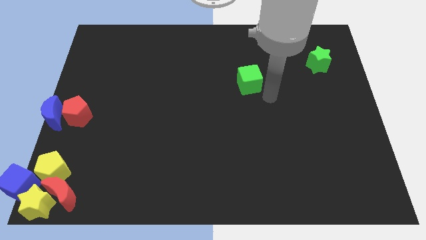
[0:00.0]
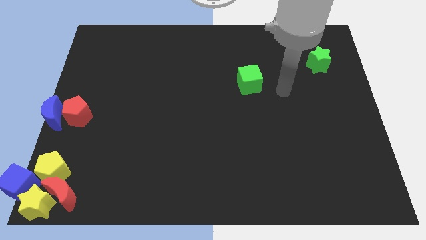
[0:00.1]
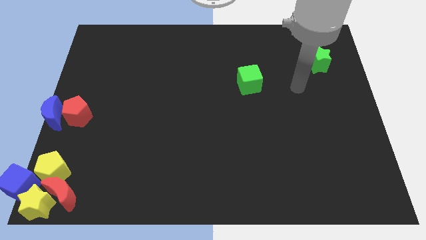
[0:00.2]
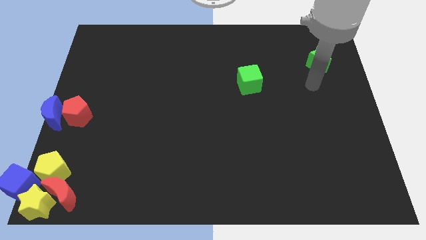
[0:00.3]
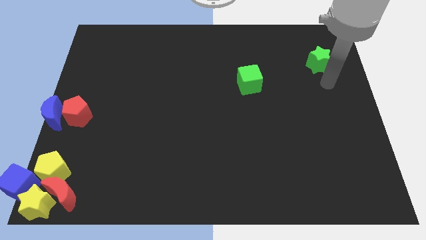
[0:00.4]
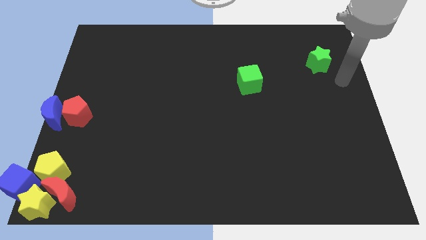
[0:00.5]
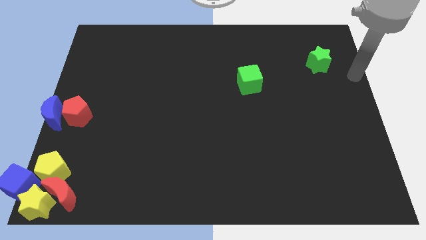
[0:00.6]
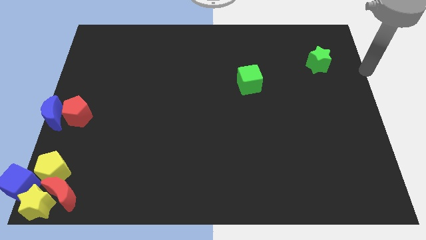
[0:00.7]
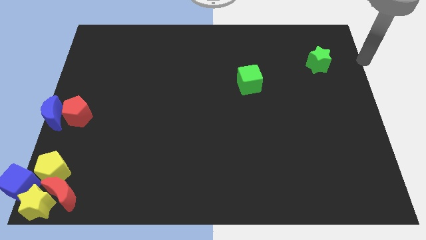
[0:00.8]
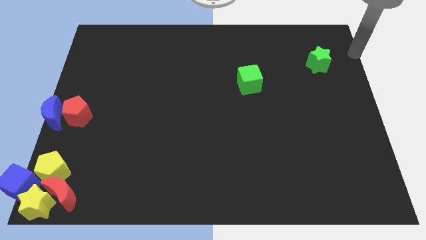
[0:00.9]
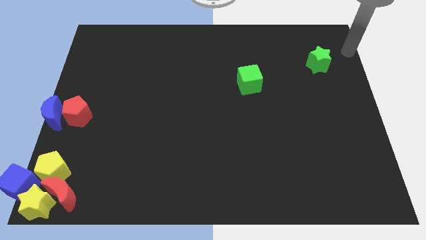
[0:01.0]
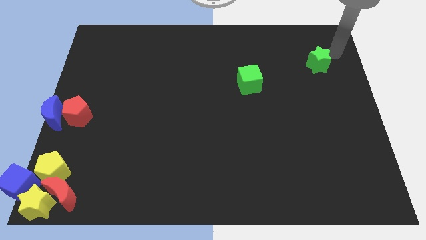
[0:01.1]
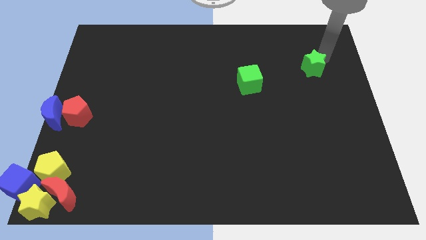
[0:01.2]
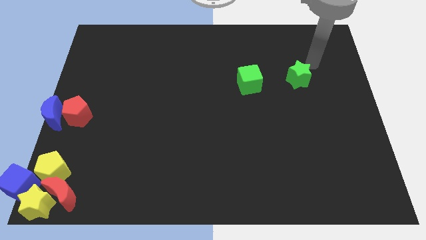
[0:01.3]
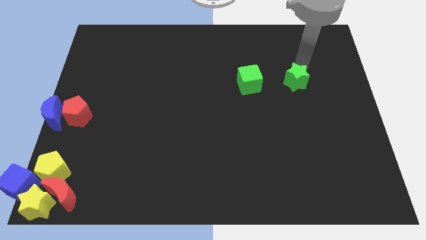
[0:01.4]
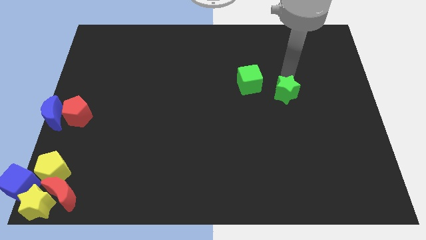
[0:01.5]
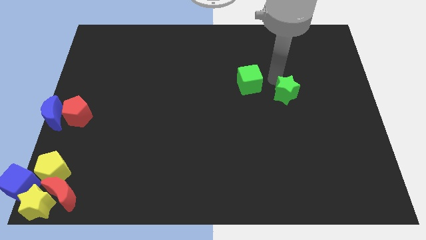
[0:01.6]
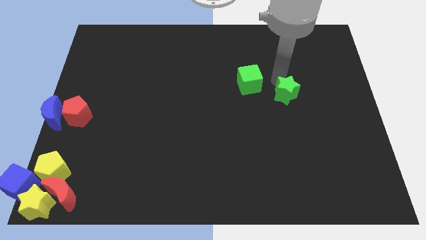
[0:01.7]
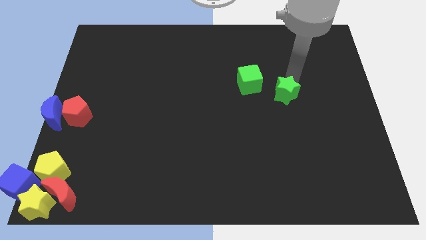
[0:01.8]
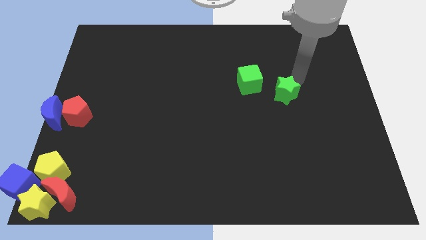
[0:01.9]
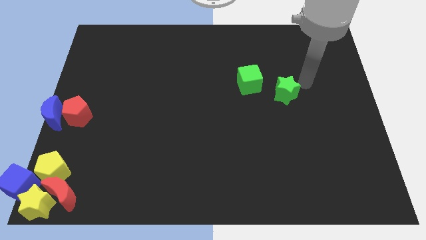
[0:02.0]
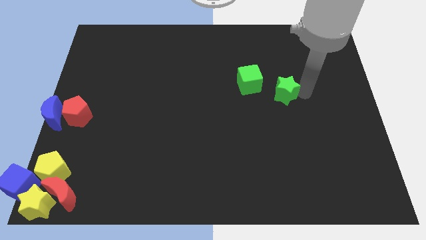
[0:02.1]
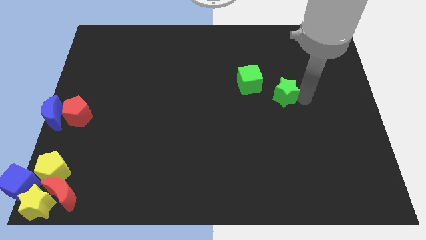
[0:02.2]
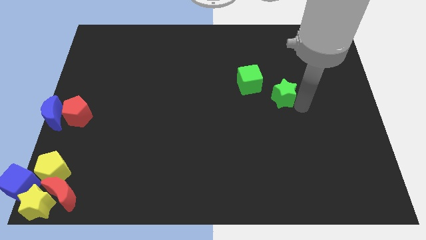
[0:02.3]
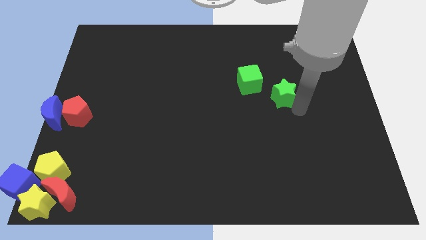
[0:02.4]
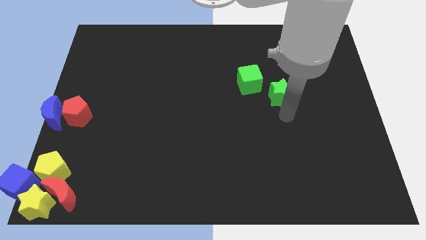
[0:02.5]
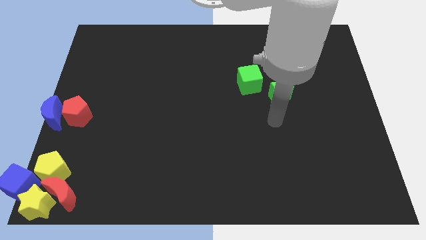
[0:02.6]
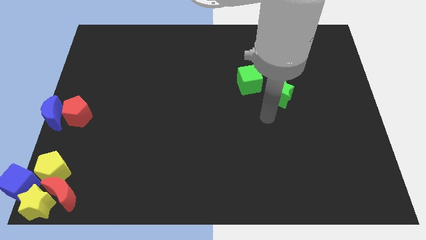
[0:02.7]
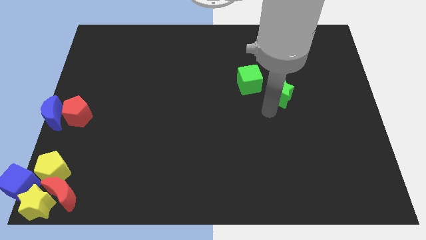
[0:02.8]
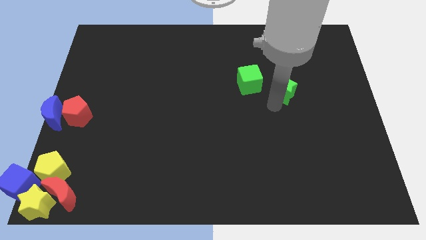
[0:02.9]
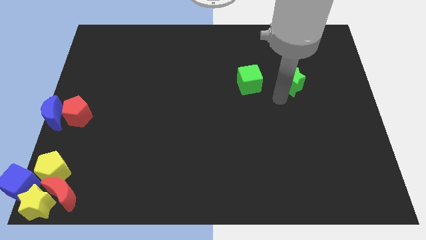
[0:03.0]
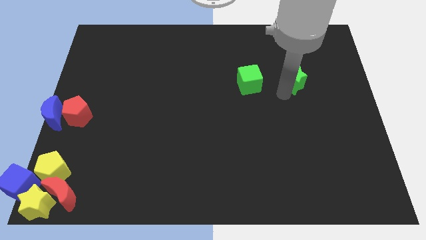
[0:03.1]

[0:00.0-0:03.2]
place green star to the right of the green cube

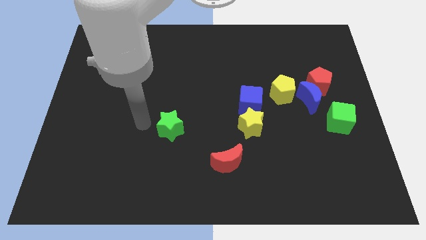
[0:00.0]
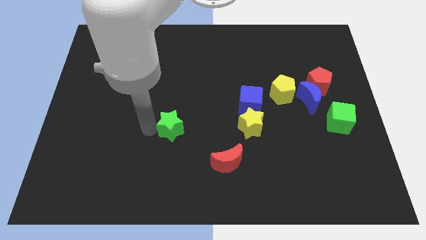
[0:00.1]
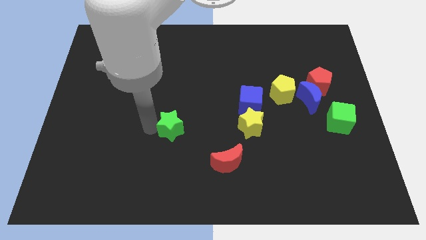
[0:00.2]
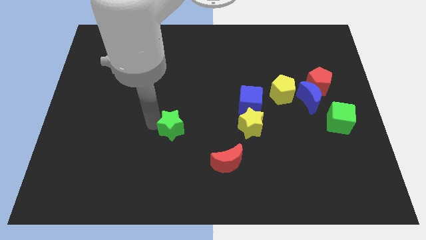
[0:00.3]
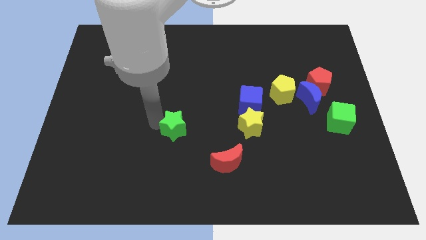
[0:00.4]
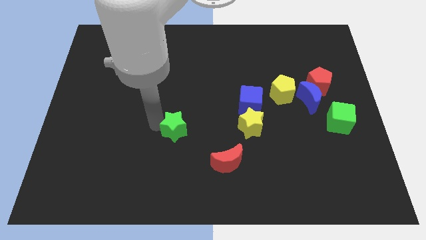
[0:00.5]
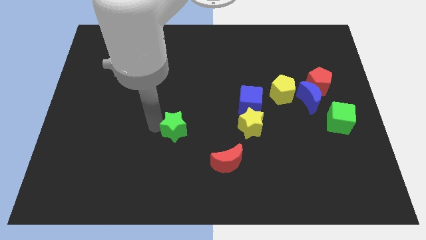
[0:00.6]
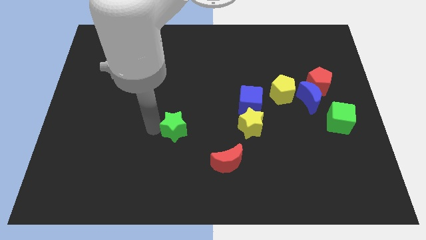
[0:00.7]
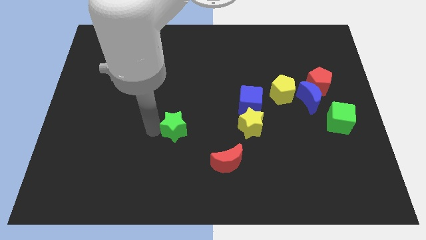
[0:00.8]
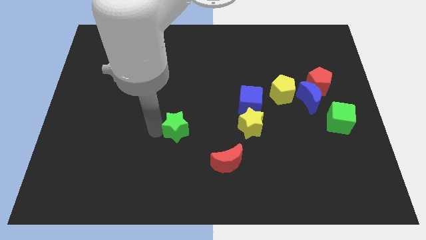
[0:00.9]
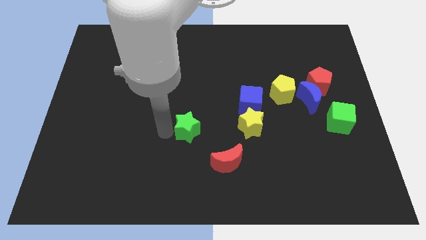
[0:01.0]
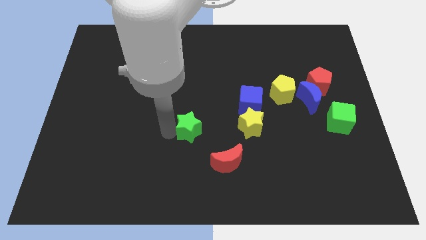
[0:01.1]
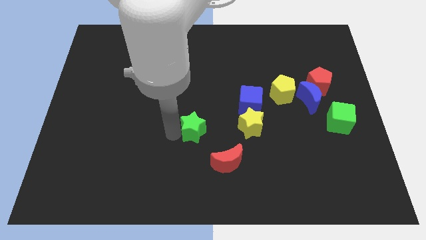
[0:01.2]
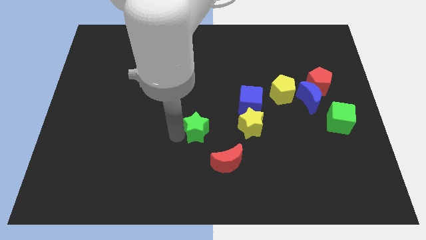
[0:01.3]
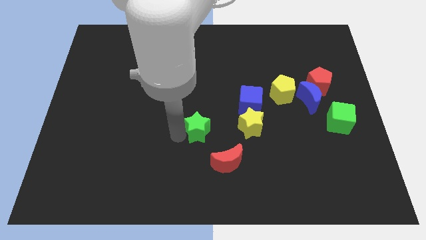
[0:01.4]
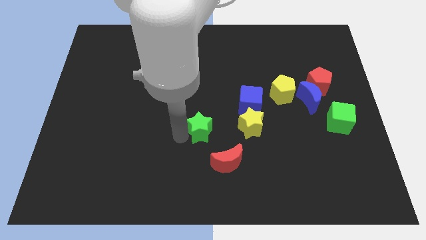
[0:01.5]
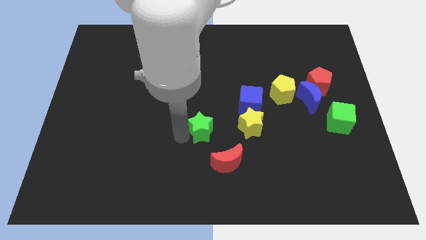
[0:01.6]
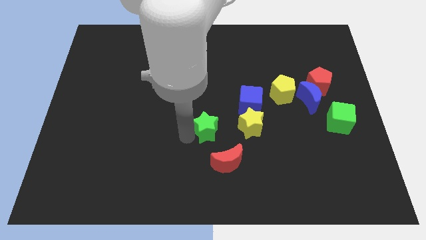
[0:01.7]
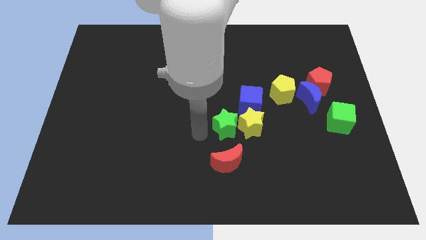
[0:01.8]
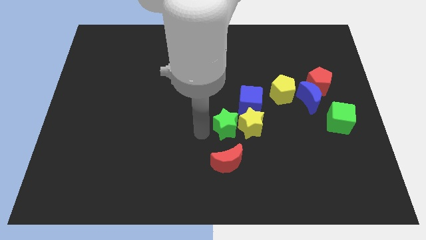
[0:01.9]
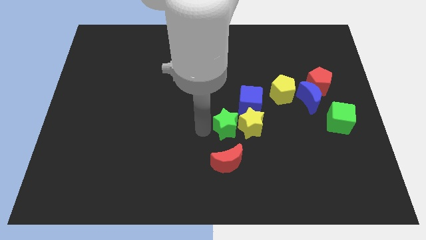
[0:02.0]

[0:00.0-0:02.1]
slide green star into yellow star

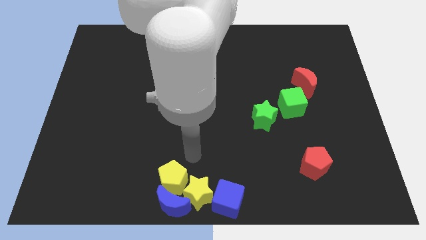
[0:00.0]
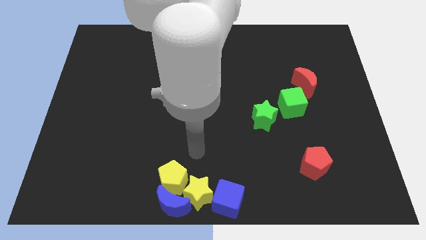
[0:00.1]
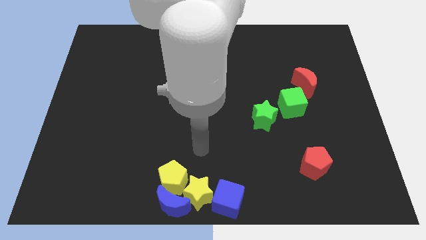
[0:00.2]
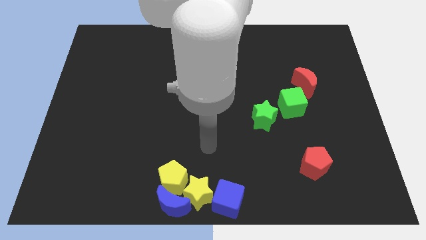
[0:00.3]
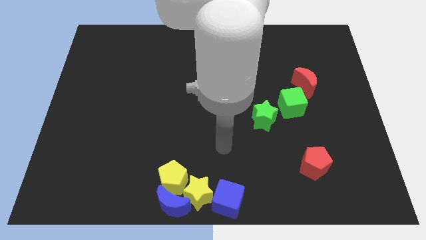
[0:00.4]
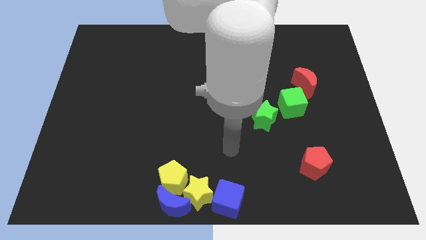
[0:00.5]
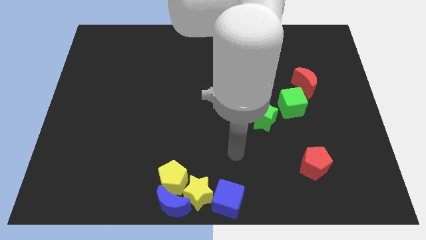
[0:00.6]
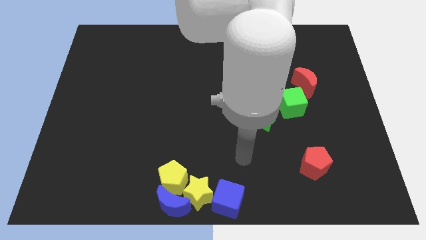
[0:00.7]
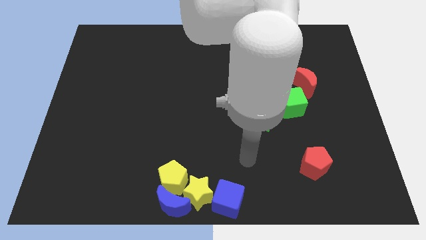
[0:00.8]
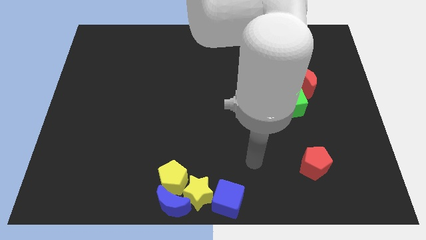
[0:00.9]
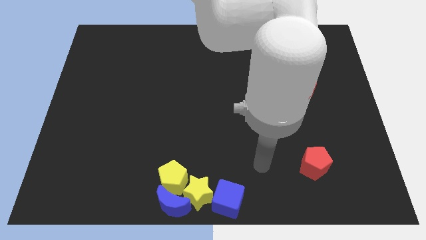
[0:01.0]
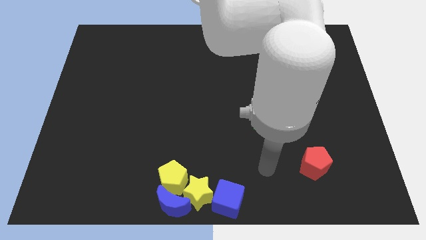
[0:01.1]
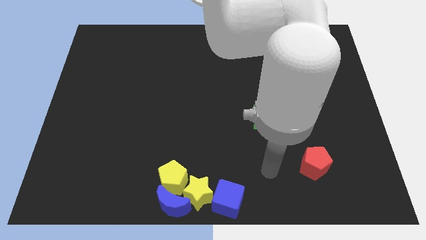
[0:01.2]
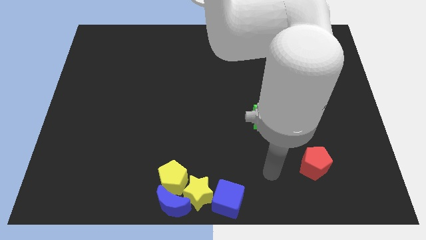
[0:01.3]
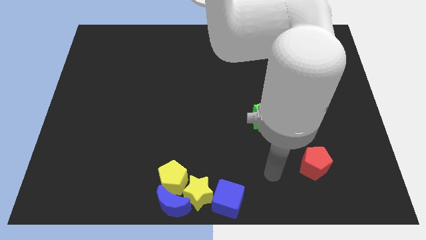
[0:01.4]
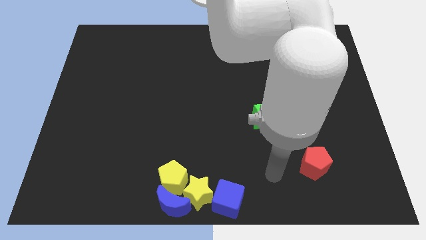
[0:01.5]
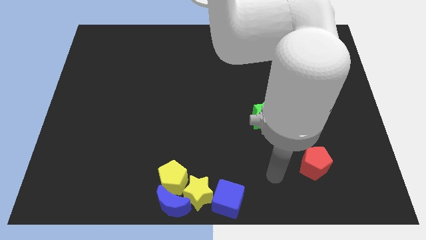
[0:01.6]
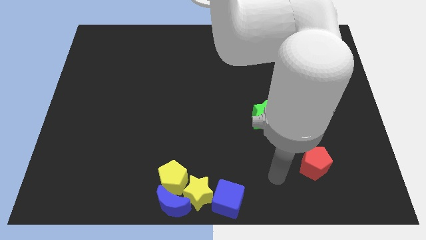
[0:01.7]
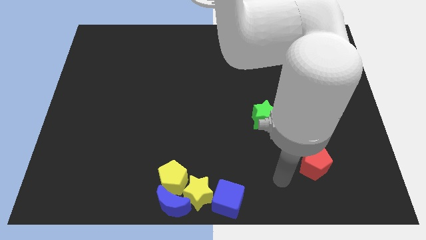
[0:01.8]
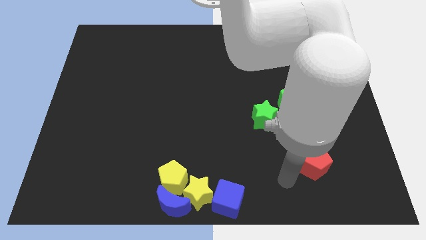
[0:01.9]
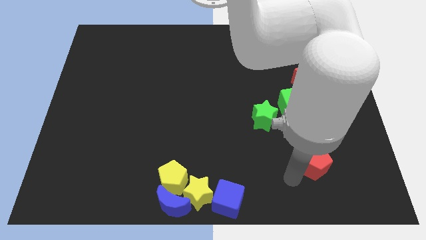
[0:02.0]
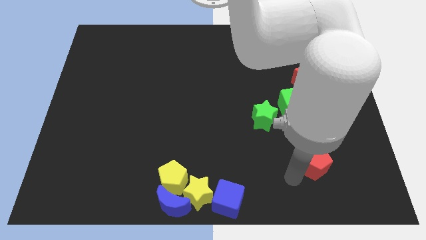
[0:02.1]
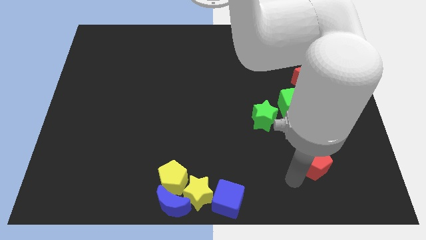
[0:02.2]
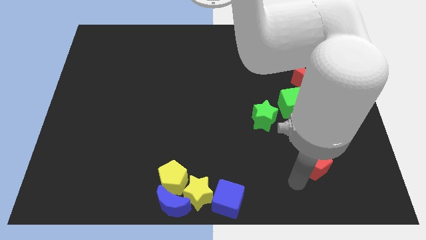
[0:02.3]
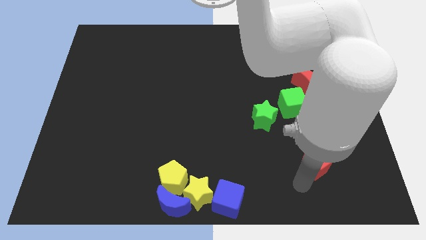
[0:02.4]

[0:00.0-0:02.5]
move the arm towards the red pentagon

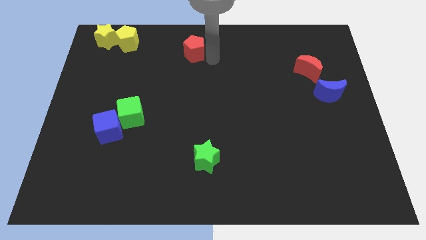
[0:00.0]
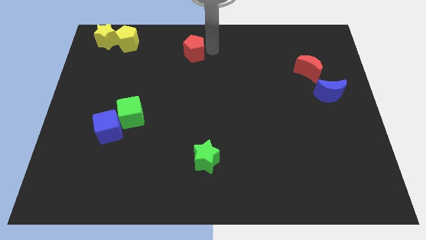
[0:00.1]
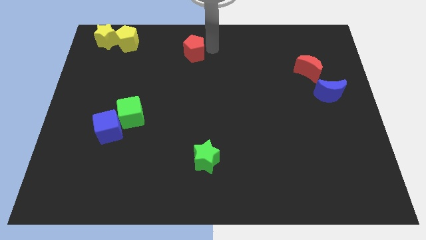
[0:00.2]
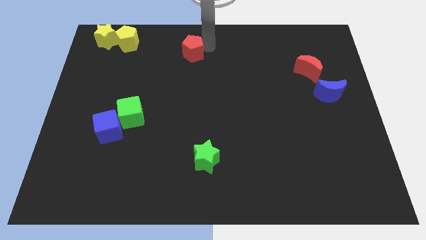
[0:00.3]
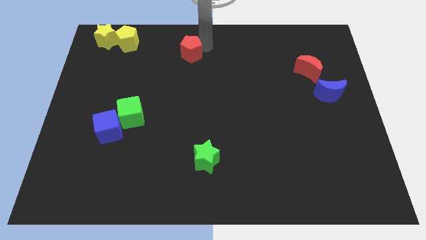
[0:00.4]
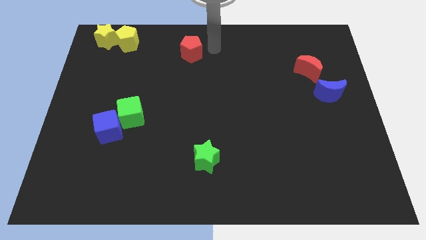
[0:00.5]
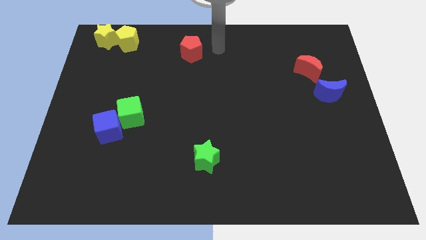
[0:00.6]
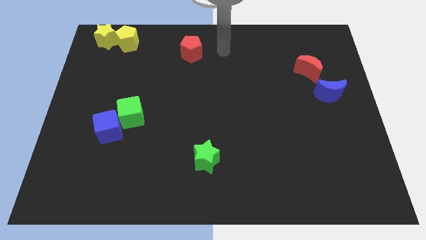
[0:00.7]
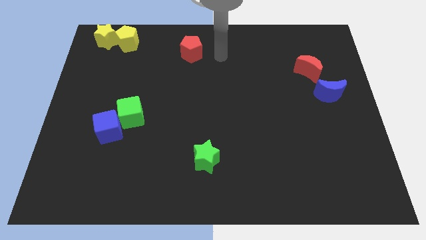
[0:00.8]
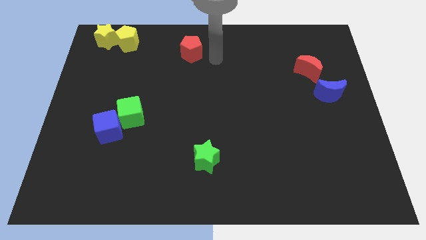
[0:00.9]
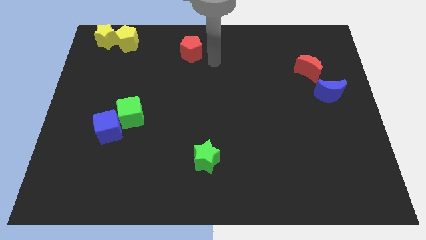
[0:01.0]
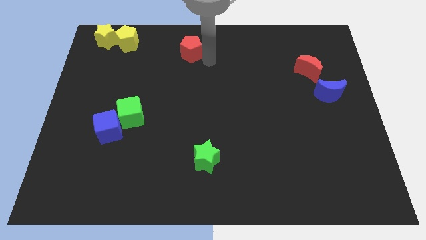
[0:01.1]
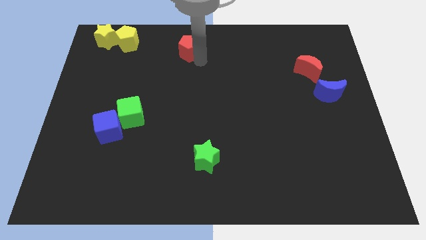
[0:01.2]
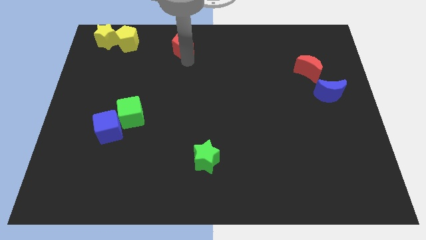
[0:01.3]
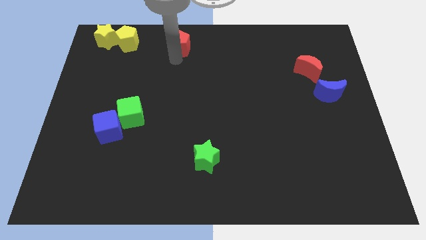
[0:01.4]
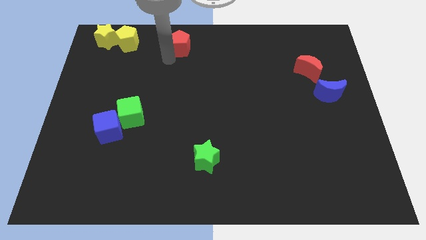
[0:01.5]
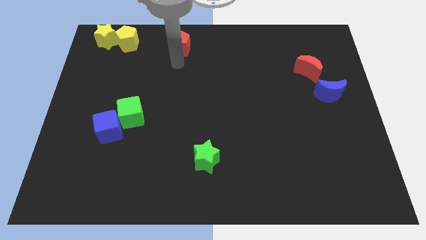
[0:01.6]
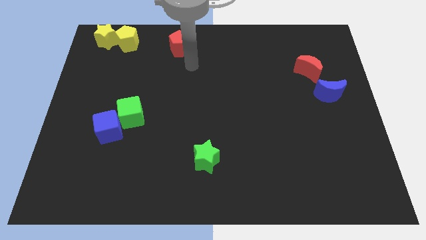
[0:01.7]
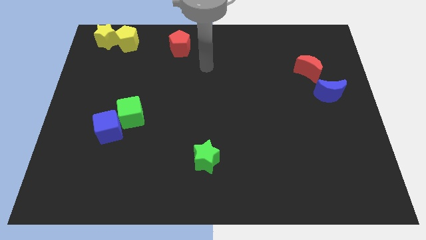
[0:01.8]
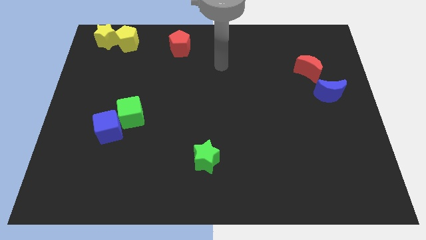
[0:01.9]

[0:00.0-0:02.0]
place the red block to the right side of the yellow pentagon
